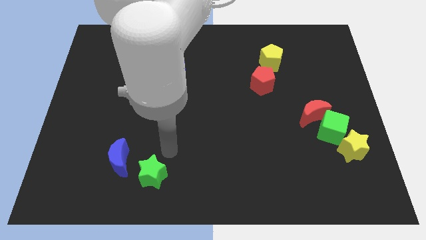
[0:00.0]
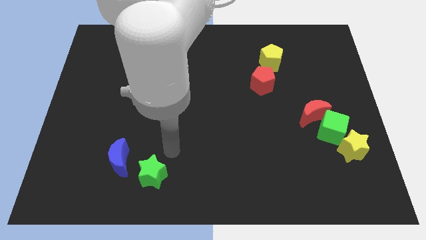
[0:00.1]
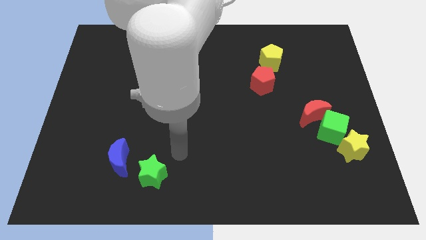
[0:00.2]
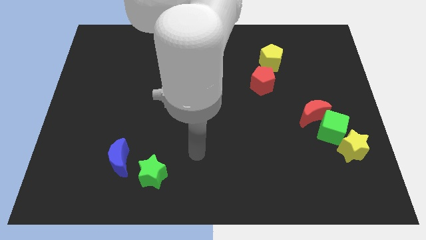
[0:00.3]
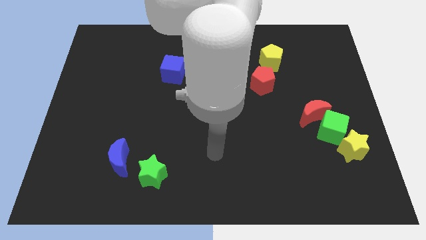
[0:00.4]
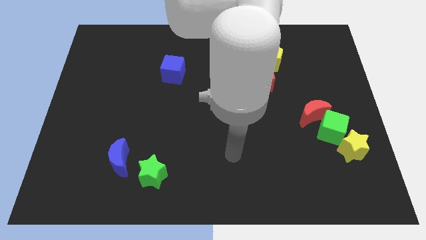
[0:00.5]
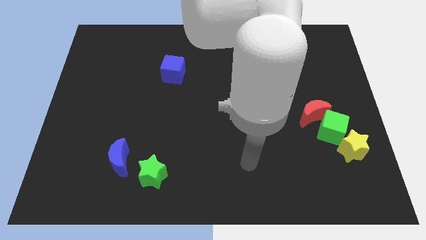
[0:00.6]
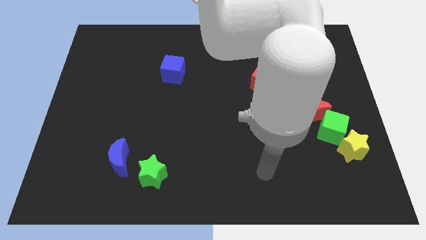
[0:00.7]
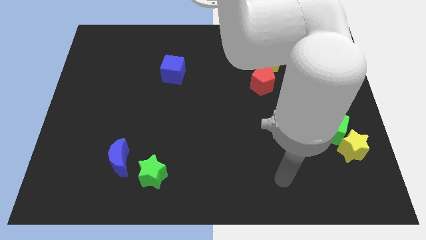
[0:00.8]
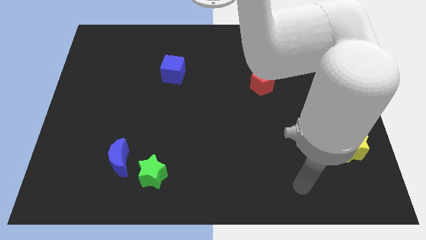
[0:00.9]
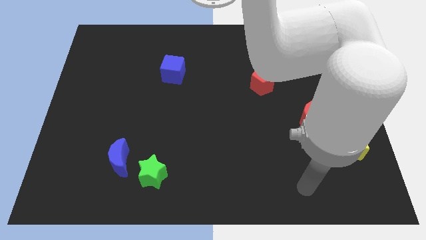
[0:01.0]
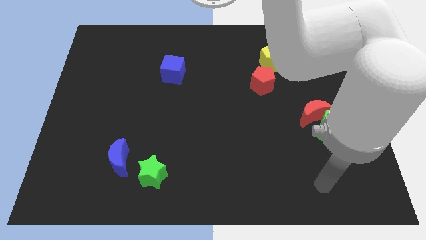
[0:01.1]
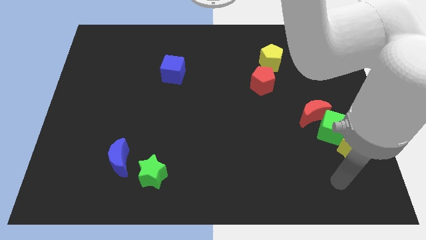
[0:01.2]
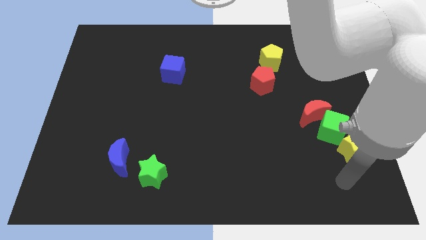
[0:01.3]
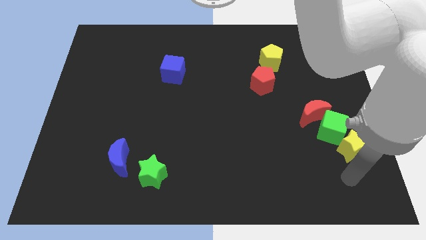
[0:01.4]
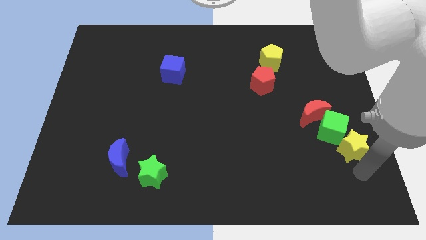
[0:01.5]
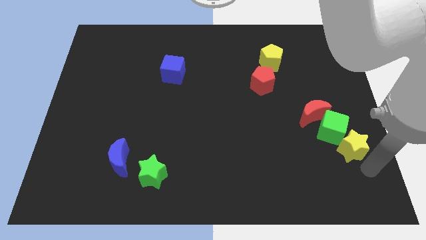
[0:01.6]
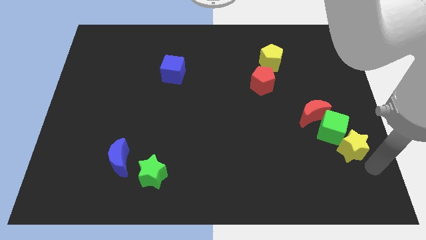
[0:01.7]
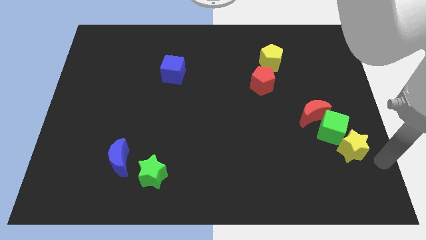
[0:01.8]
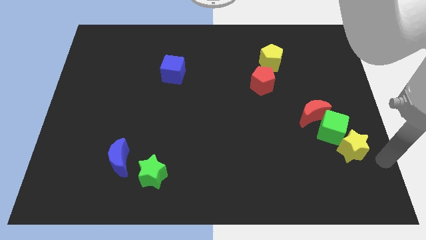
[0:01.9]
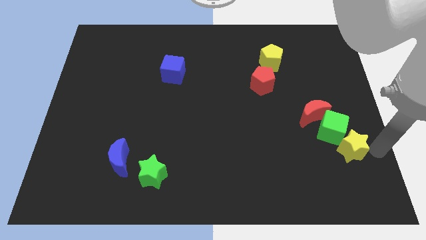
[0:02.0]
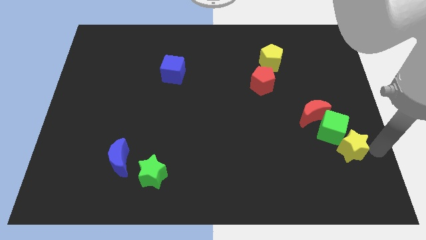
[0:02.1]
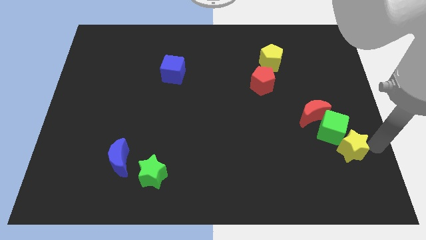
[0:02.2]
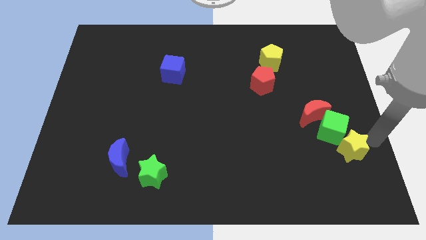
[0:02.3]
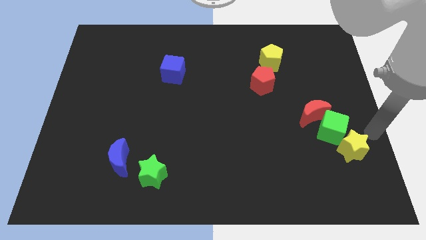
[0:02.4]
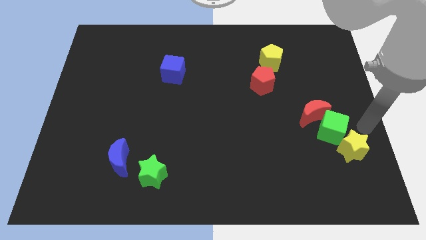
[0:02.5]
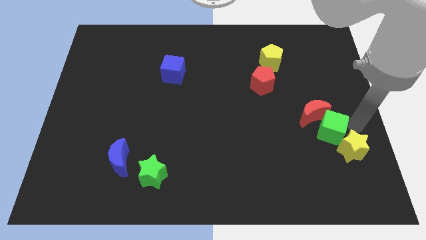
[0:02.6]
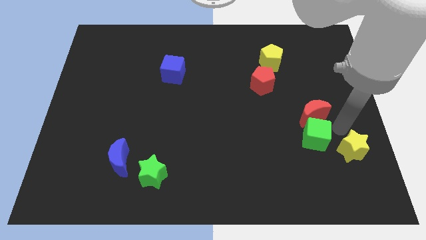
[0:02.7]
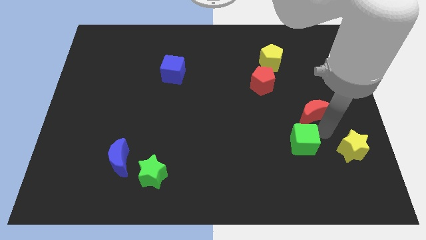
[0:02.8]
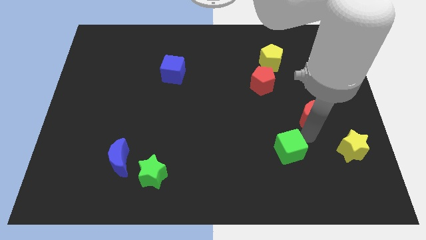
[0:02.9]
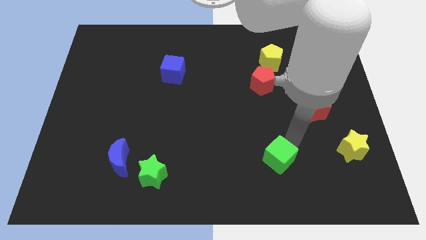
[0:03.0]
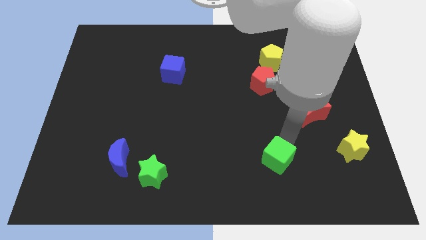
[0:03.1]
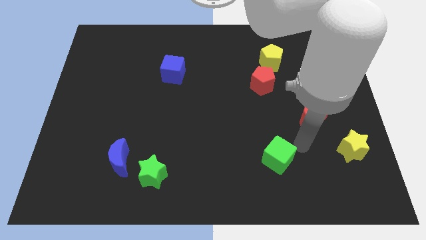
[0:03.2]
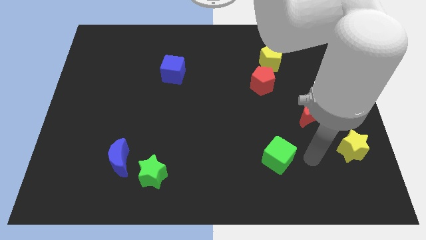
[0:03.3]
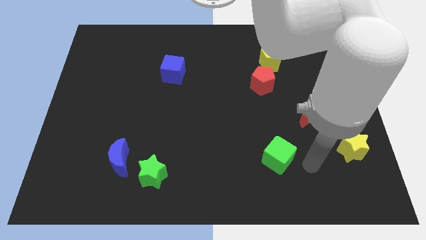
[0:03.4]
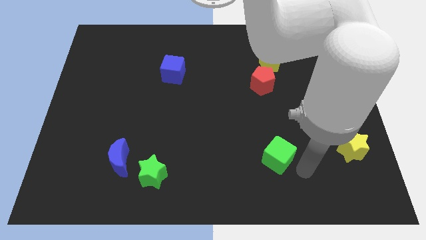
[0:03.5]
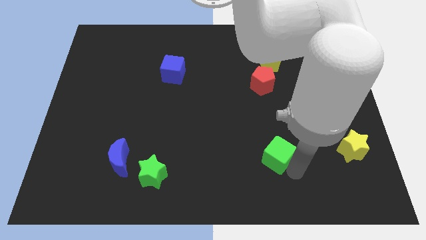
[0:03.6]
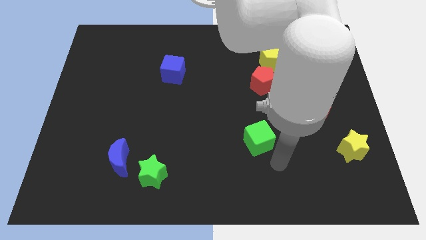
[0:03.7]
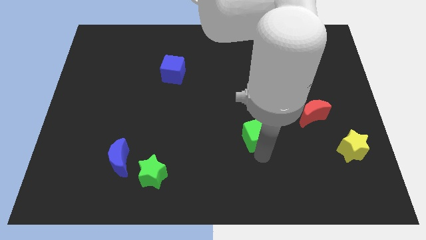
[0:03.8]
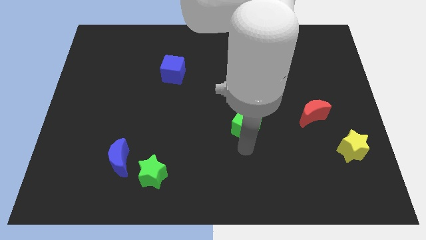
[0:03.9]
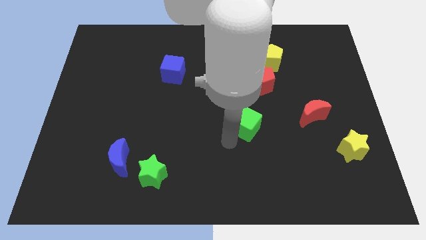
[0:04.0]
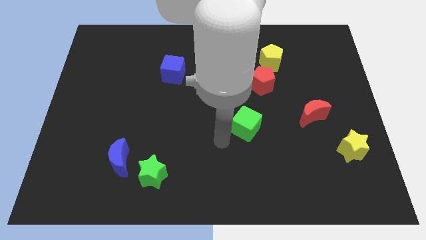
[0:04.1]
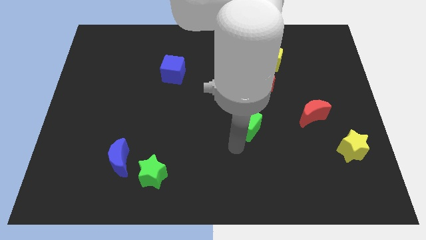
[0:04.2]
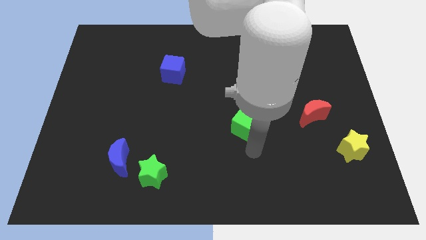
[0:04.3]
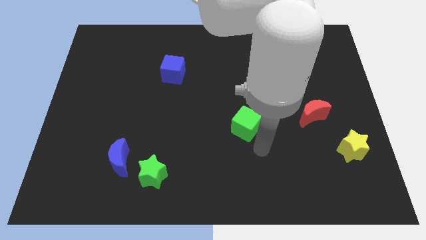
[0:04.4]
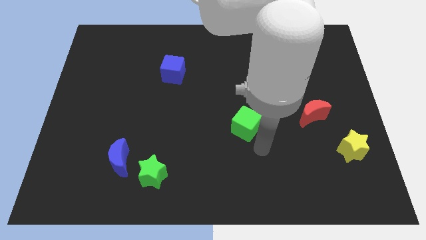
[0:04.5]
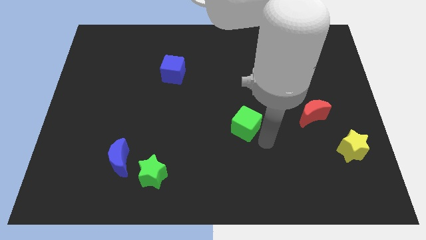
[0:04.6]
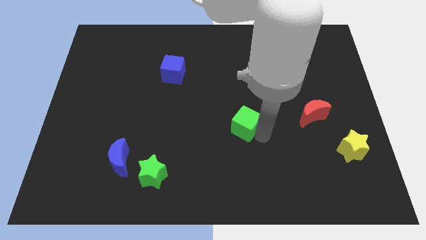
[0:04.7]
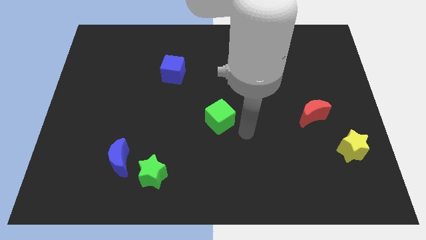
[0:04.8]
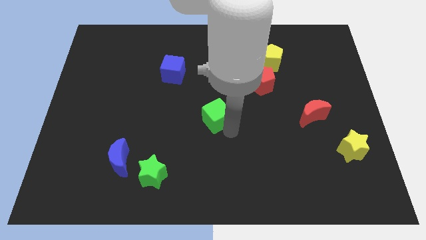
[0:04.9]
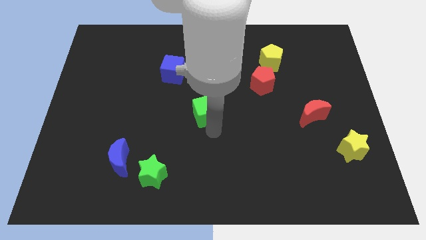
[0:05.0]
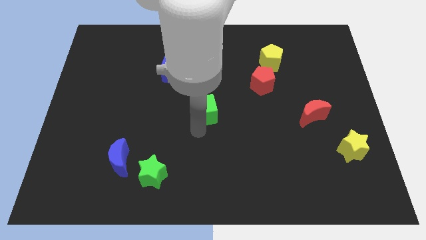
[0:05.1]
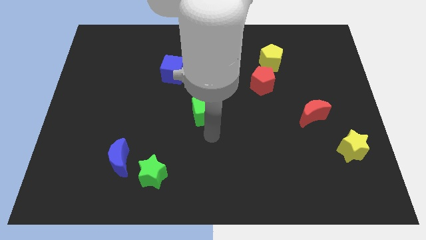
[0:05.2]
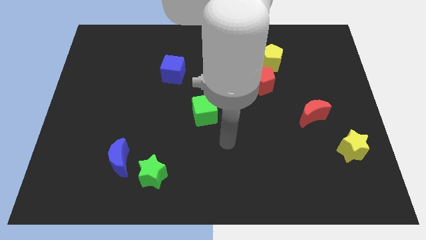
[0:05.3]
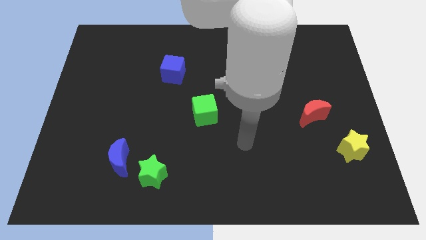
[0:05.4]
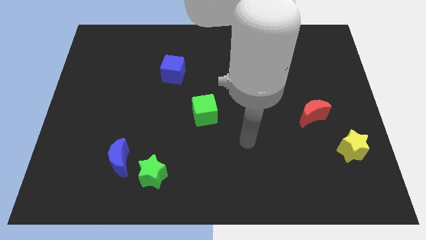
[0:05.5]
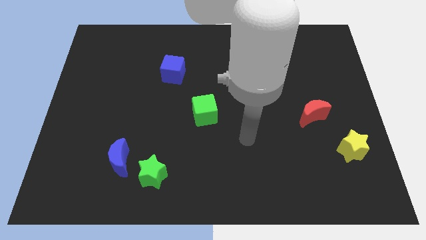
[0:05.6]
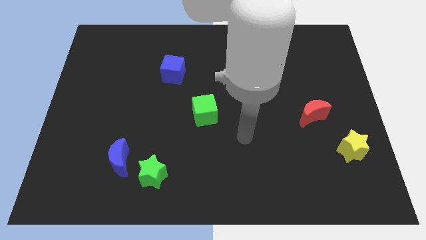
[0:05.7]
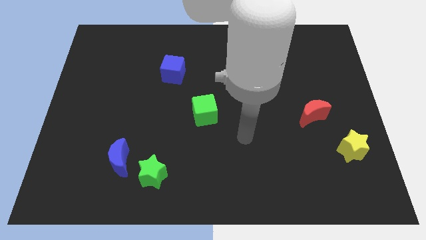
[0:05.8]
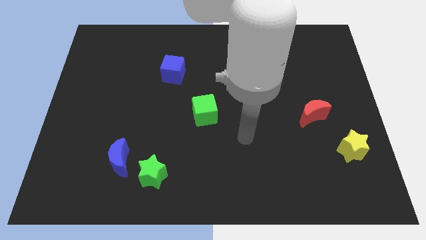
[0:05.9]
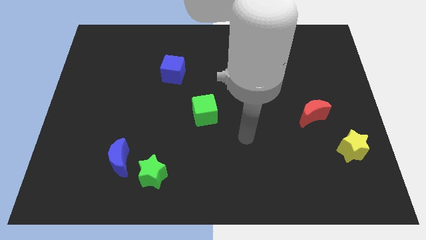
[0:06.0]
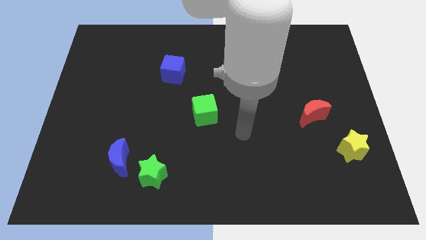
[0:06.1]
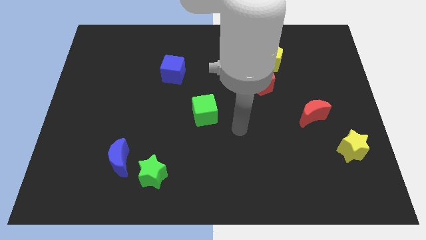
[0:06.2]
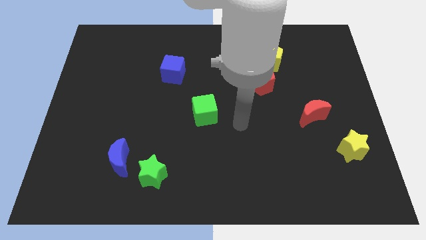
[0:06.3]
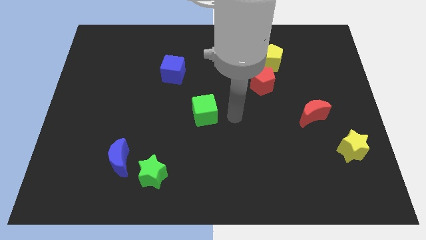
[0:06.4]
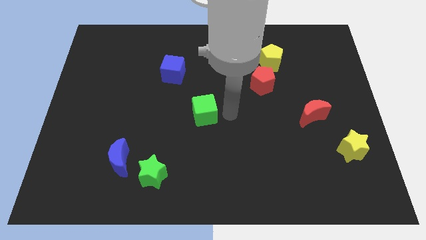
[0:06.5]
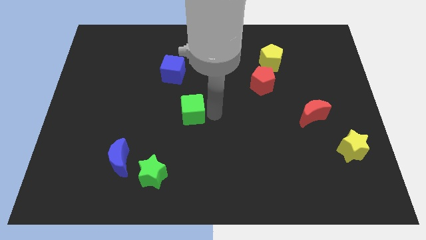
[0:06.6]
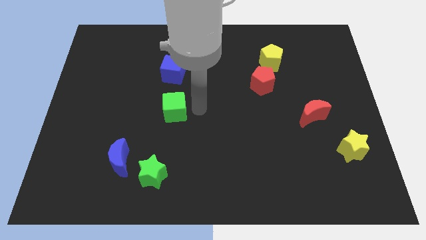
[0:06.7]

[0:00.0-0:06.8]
place the green cube below the blue cube

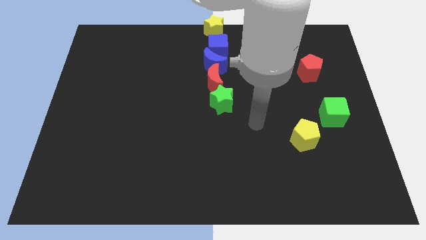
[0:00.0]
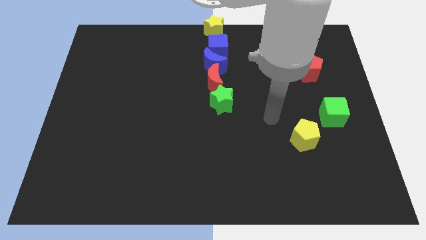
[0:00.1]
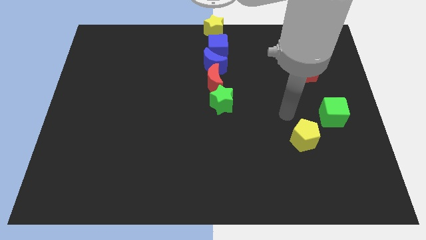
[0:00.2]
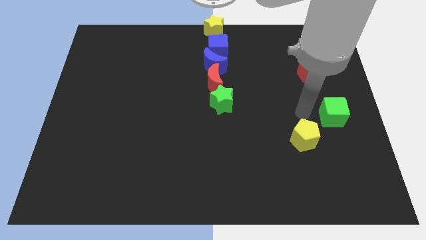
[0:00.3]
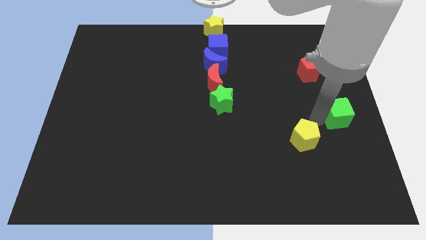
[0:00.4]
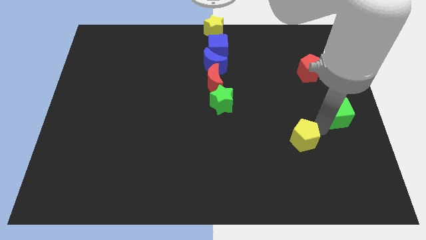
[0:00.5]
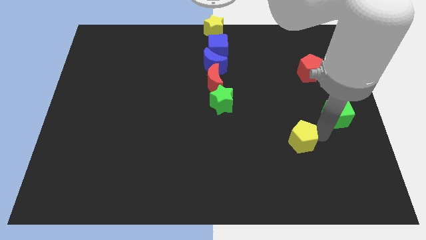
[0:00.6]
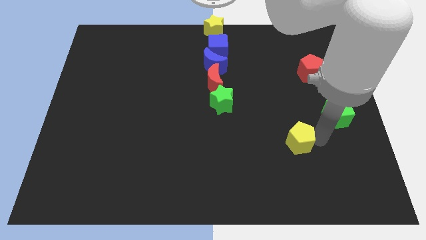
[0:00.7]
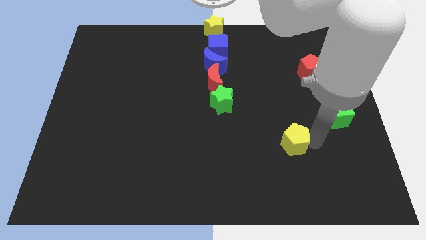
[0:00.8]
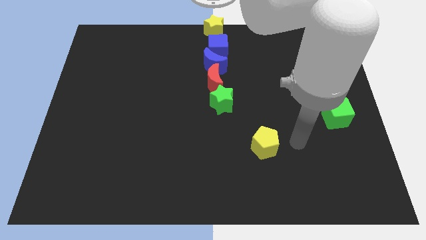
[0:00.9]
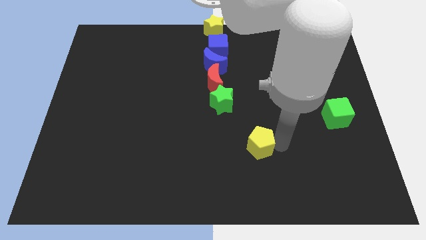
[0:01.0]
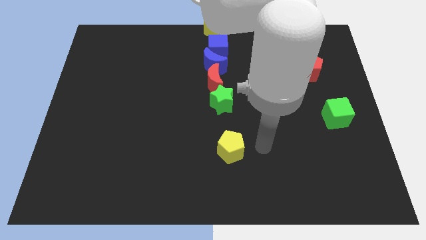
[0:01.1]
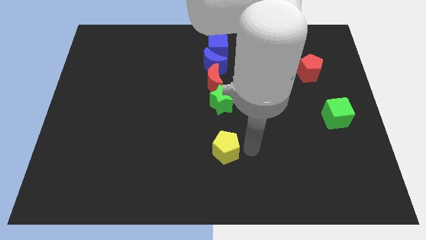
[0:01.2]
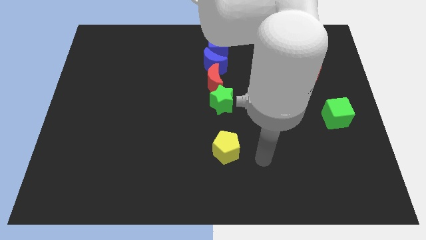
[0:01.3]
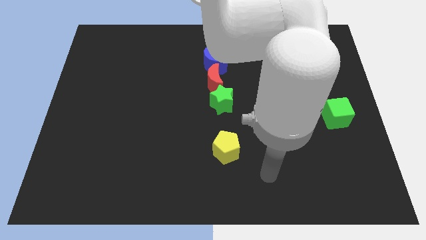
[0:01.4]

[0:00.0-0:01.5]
push the yellow pentagon below the green star

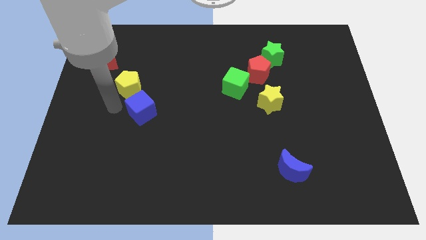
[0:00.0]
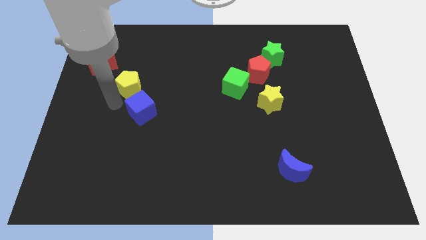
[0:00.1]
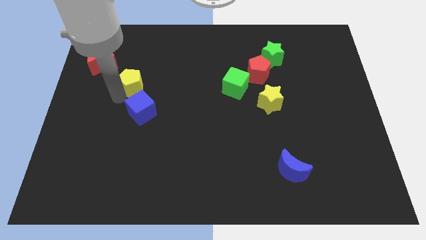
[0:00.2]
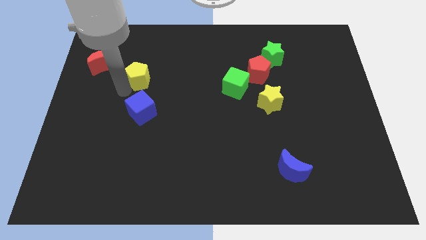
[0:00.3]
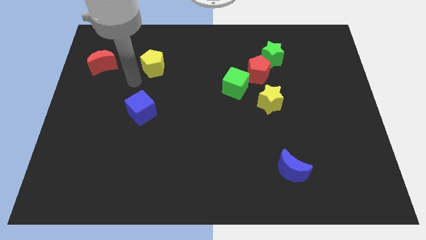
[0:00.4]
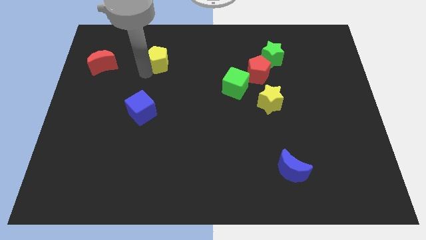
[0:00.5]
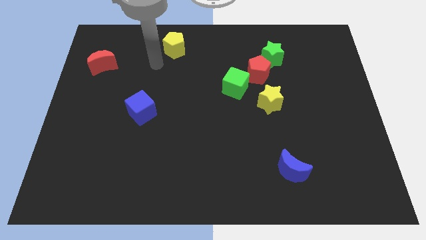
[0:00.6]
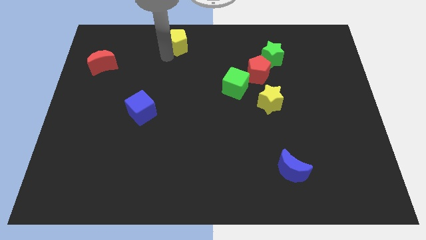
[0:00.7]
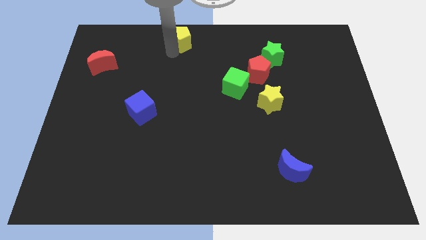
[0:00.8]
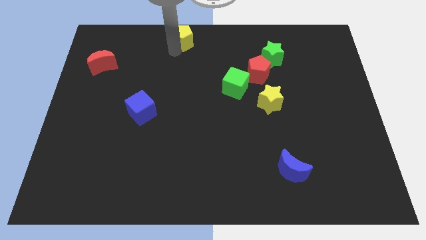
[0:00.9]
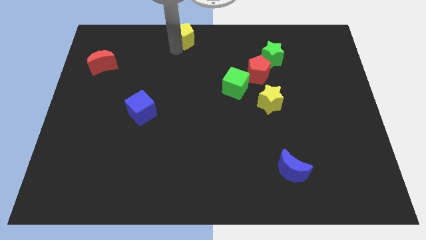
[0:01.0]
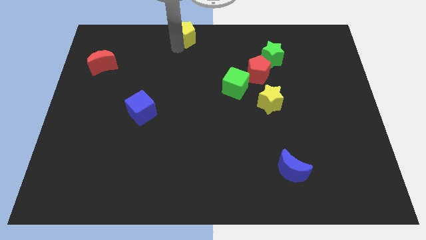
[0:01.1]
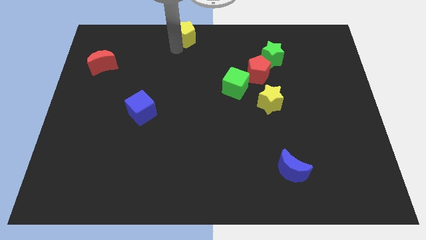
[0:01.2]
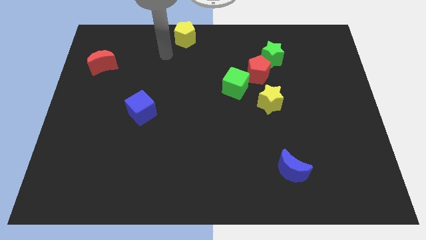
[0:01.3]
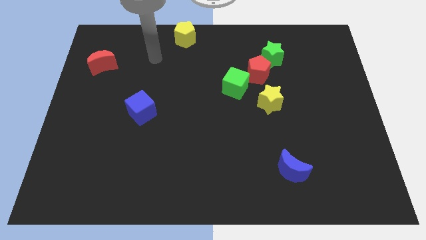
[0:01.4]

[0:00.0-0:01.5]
place the yellow pentagon at top center of the board
